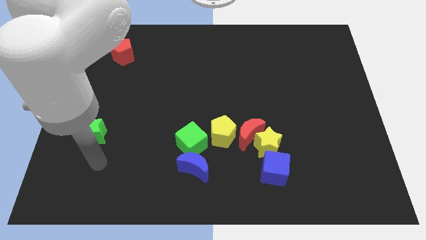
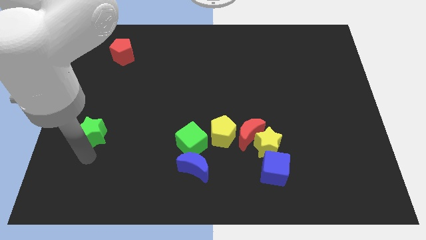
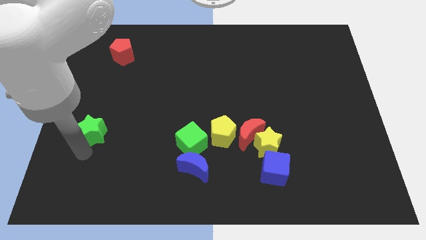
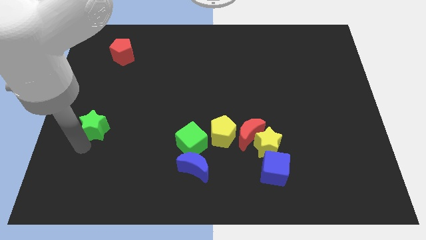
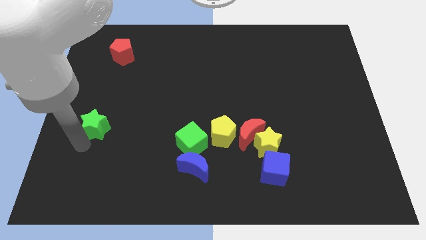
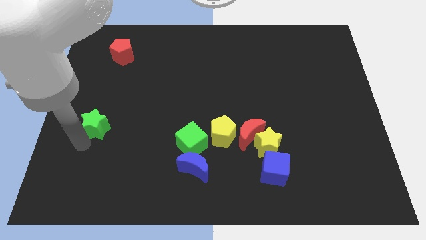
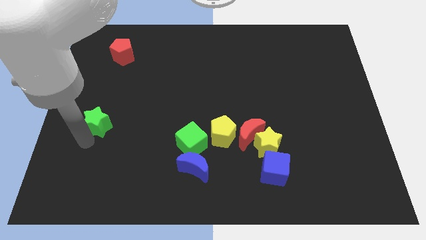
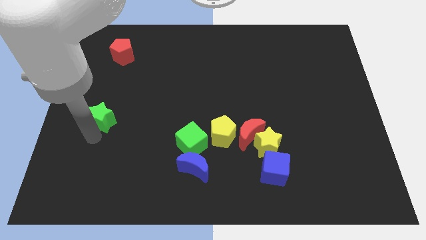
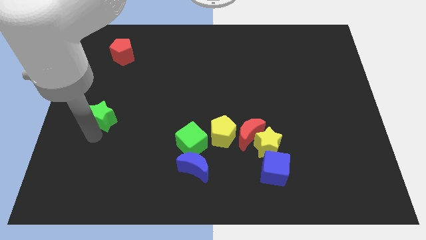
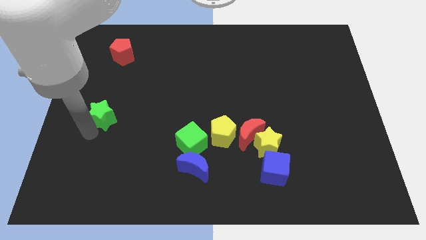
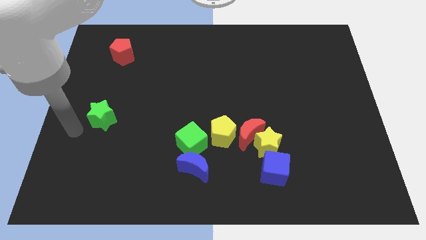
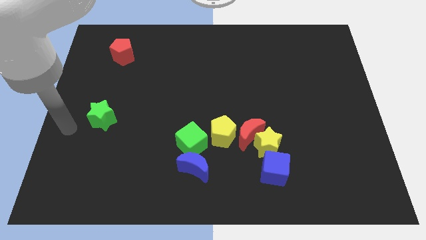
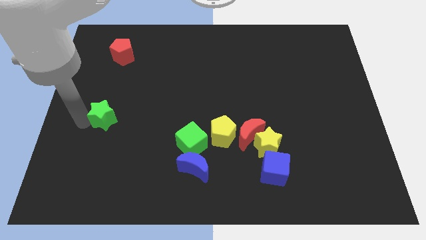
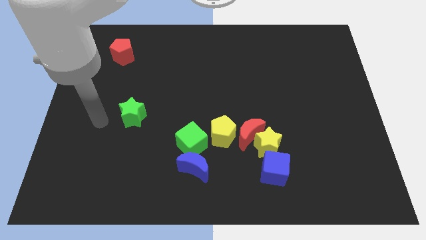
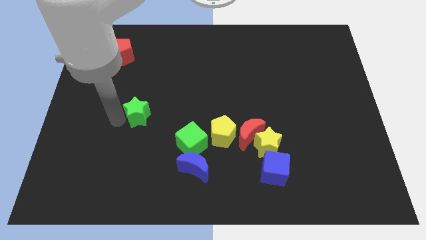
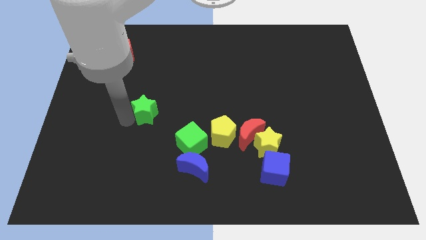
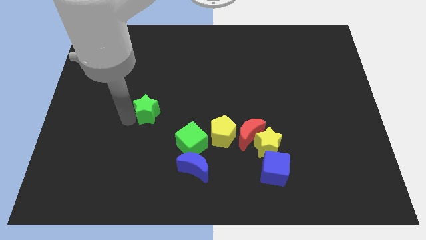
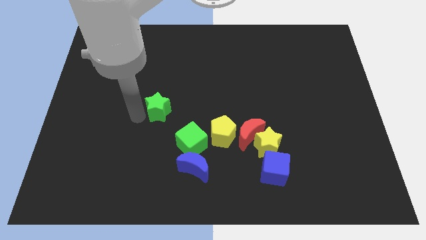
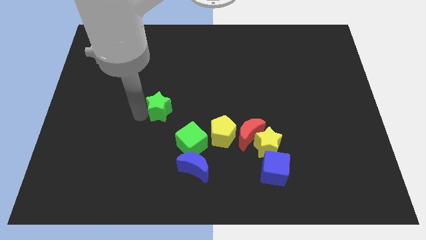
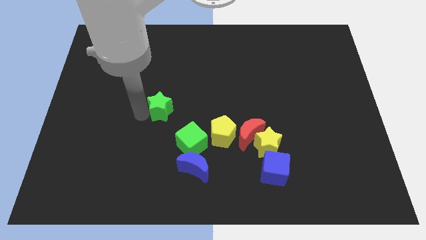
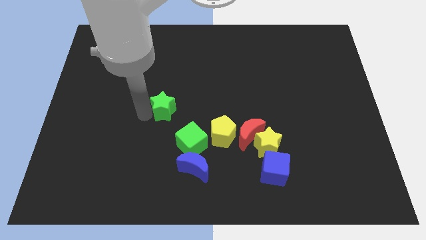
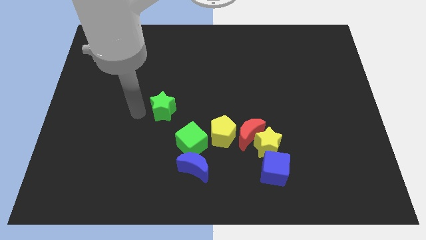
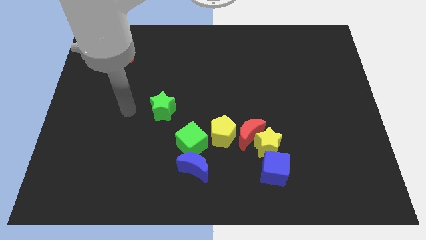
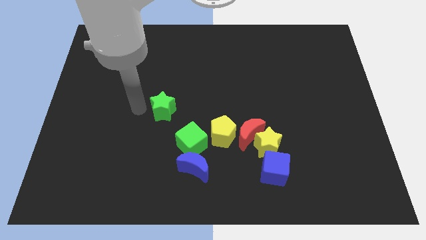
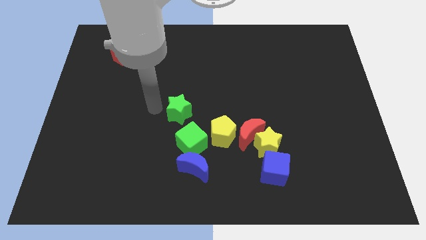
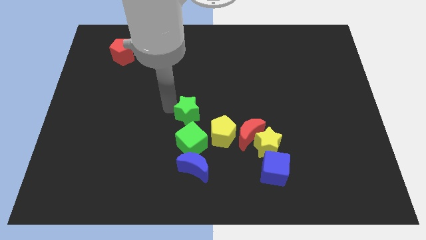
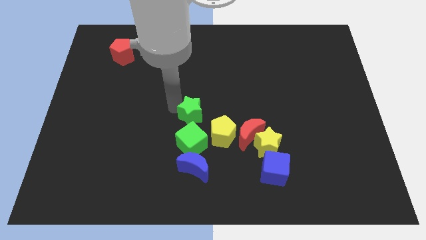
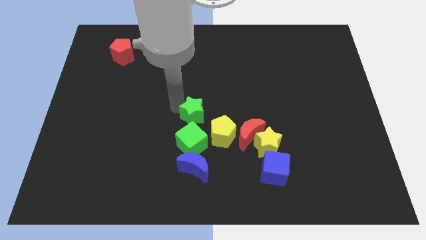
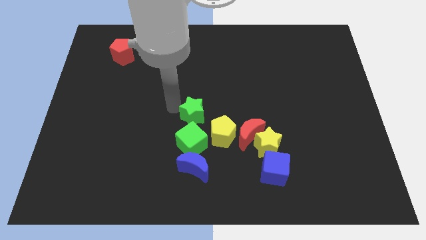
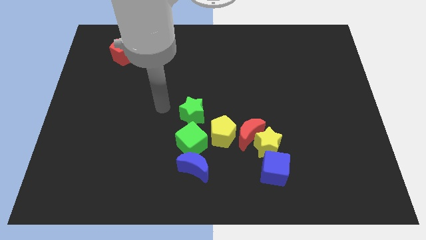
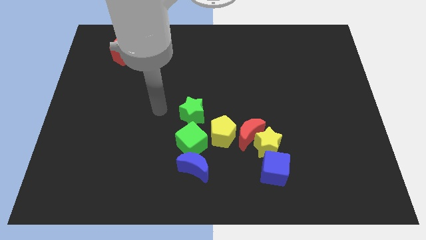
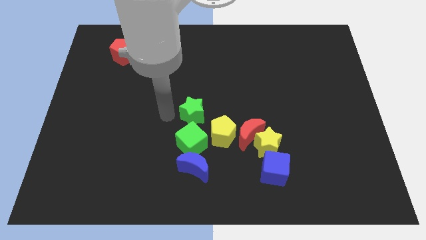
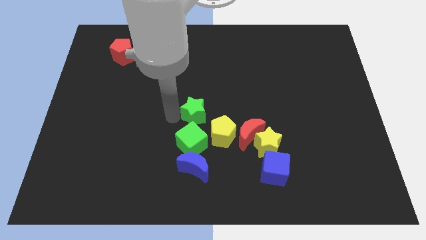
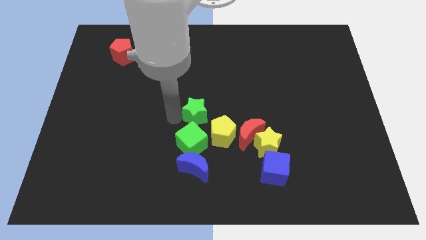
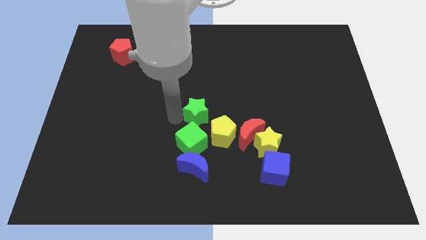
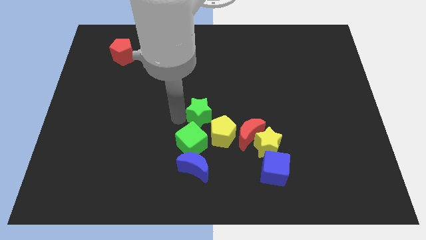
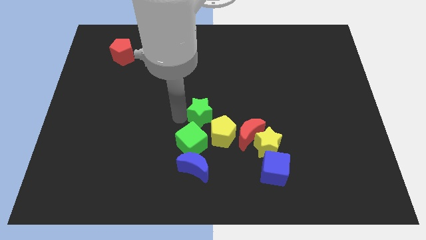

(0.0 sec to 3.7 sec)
move the green star above the green cube

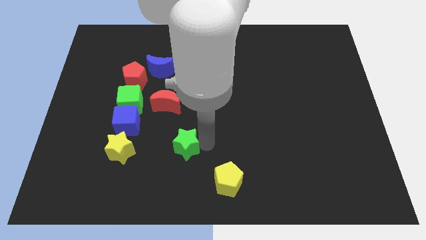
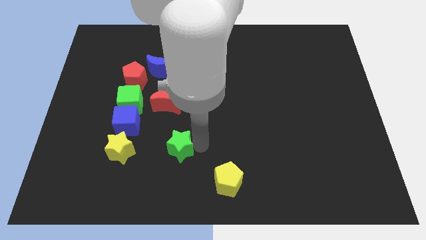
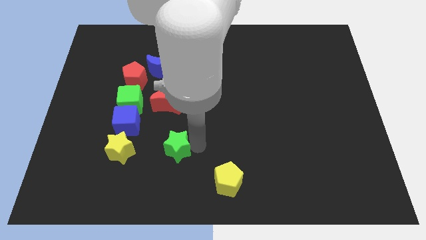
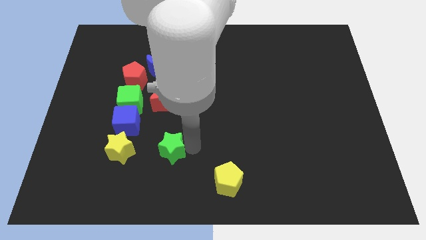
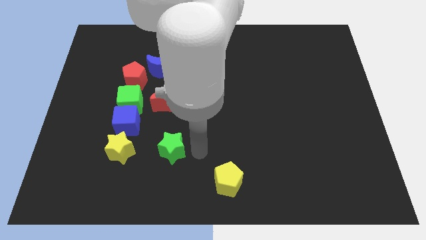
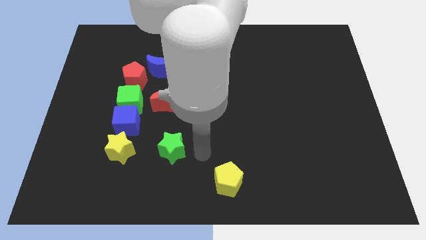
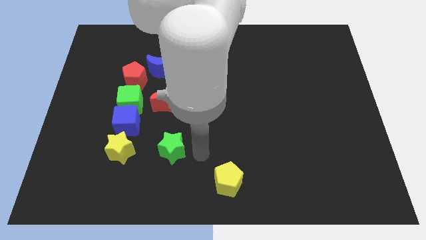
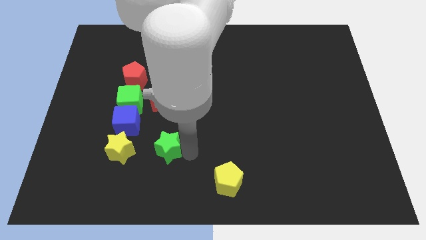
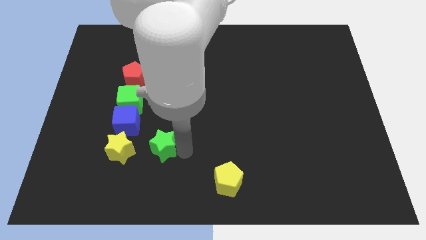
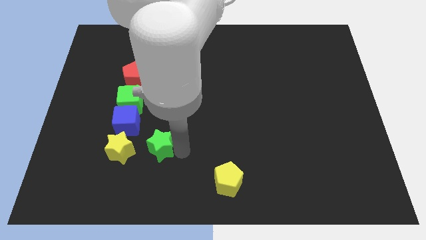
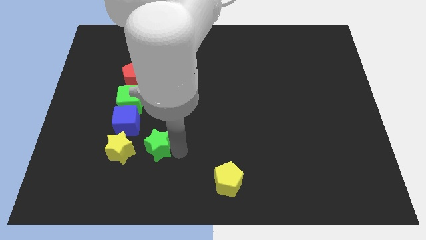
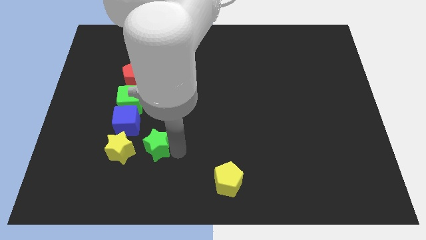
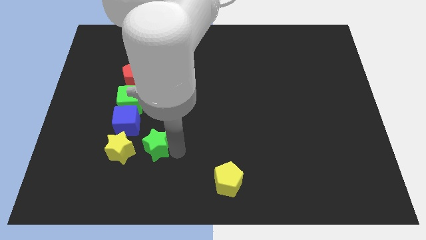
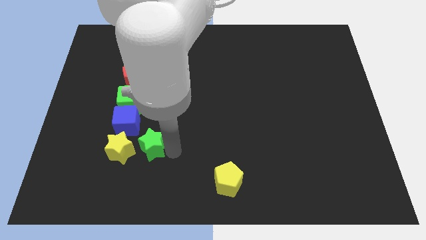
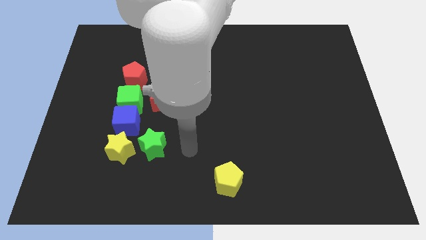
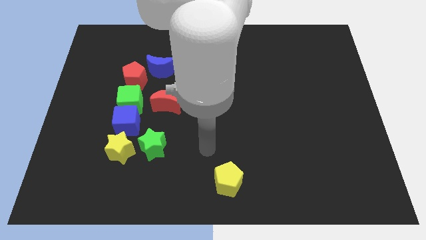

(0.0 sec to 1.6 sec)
place green star to the right of yellow star

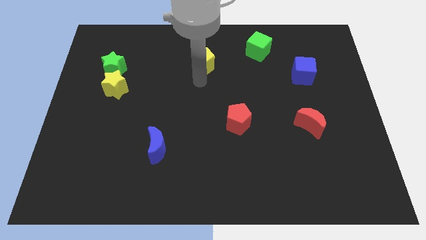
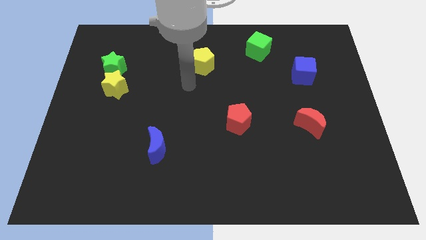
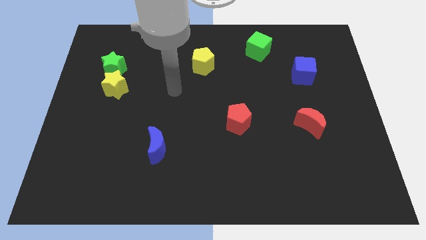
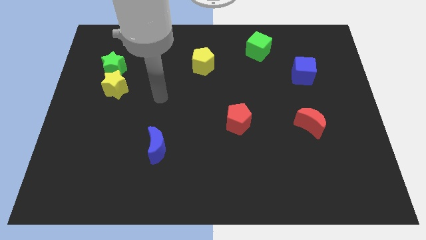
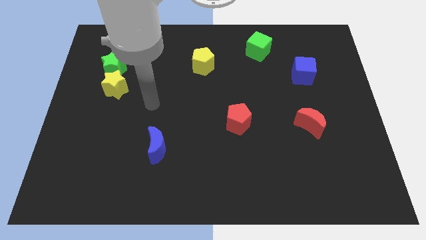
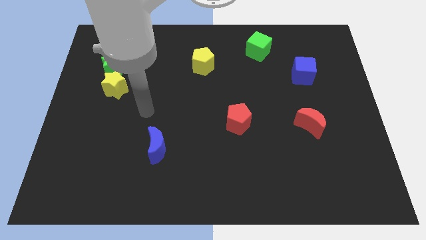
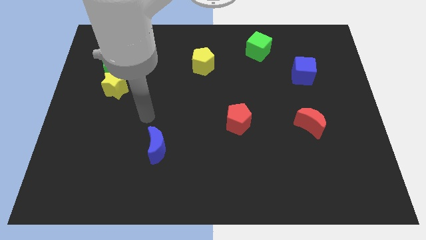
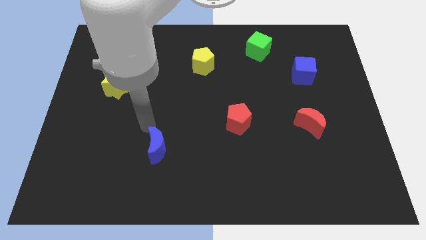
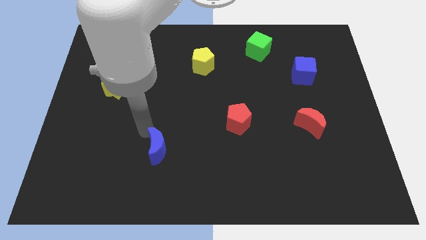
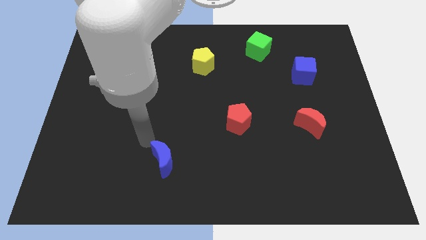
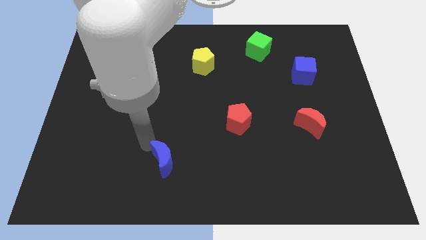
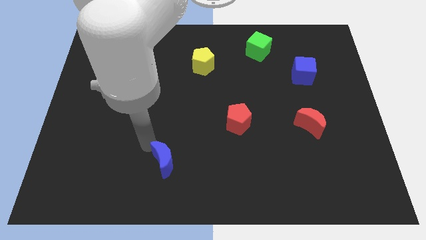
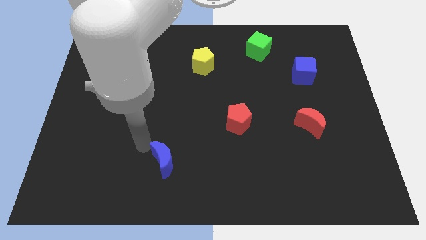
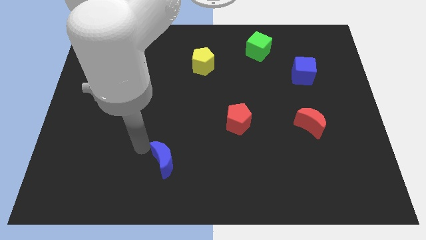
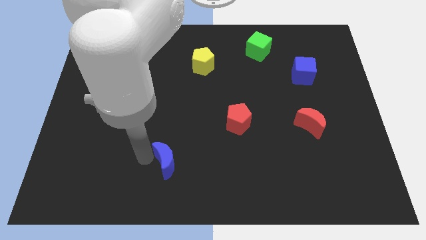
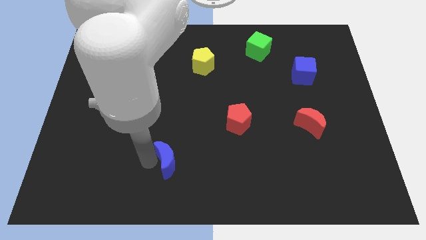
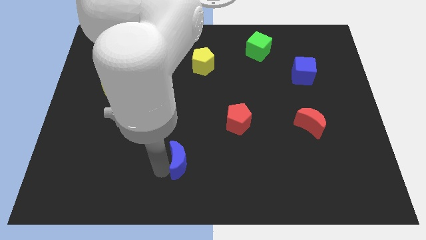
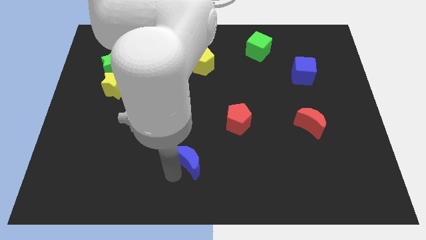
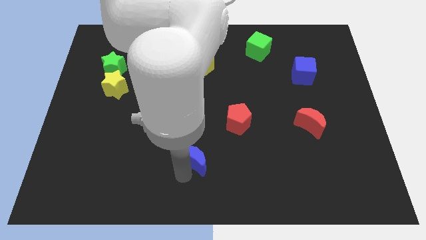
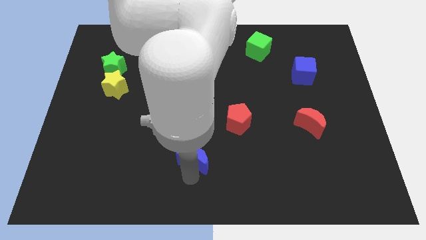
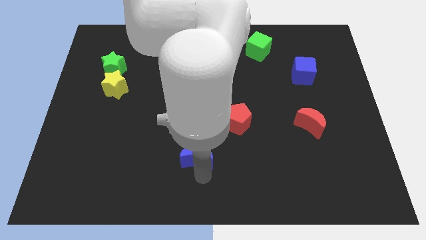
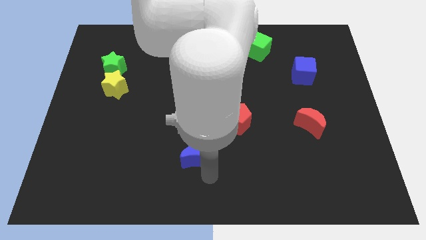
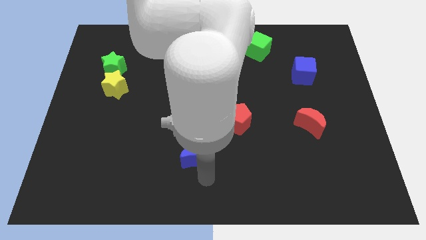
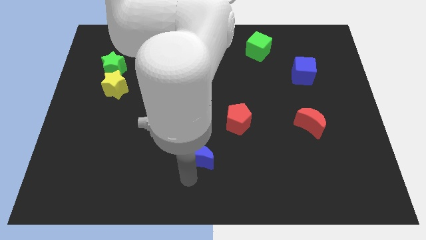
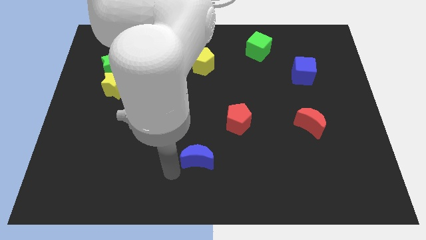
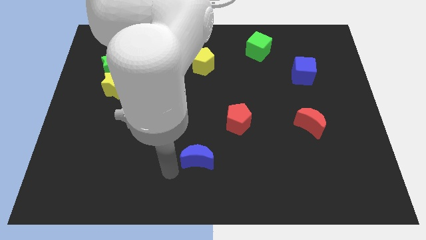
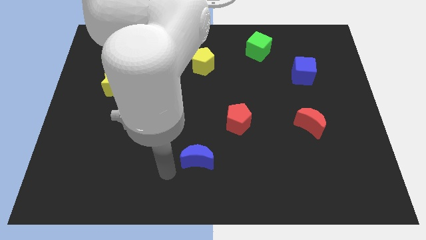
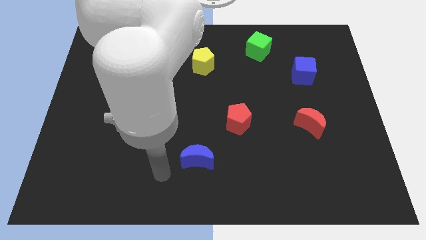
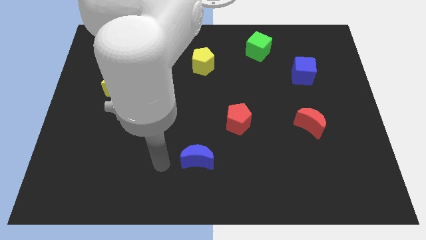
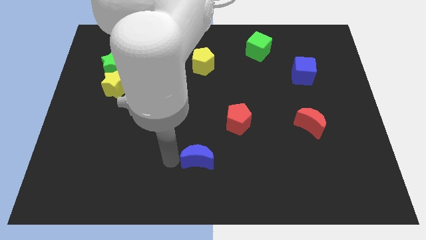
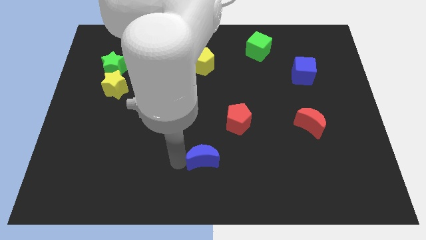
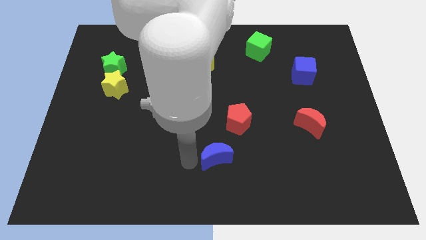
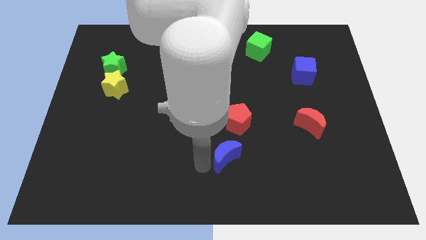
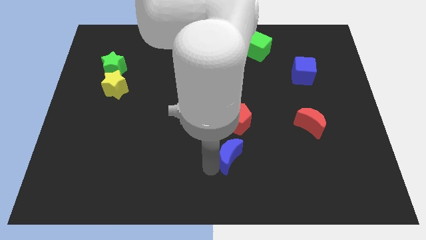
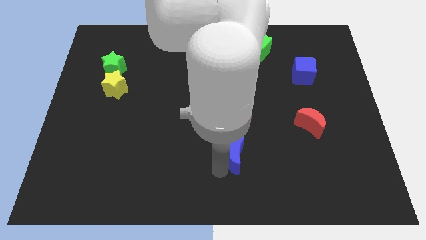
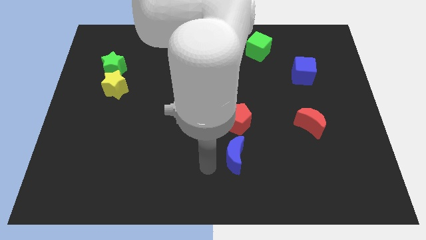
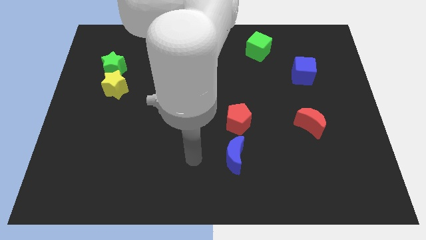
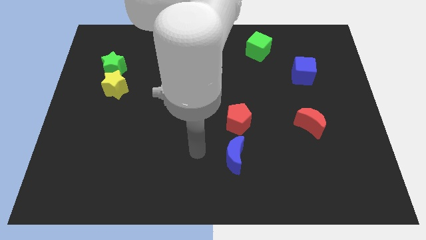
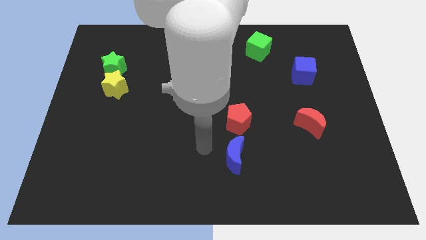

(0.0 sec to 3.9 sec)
push the blue crescent below the red pentagon
